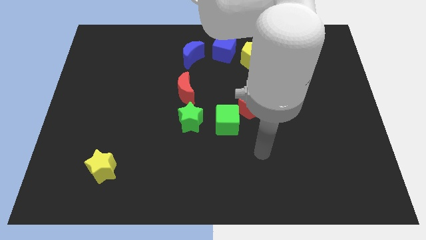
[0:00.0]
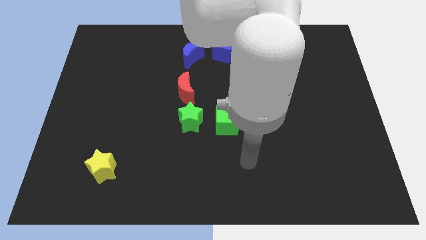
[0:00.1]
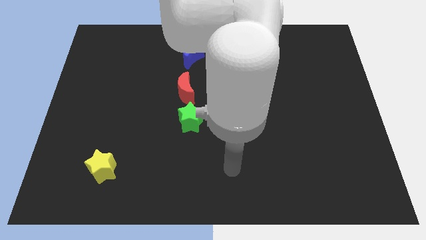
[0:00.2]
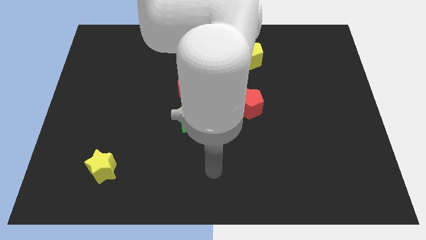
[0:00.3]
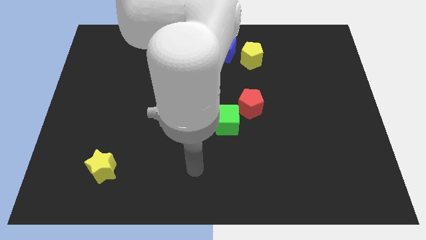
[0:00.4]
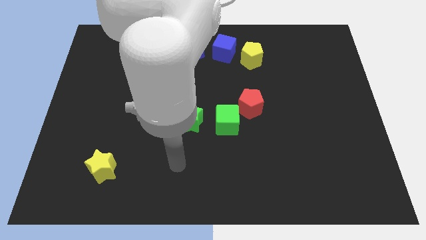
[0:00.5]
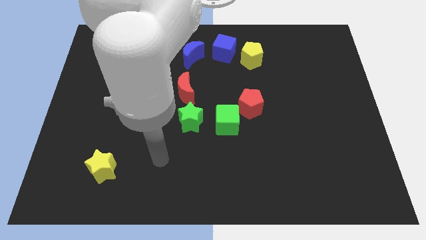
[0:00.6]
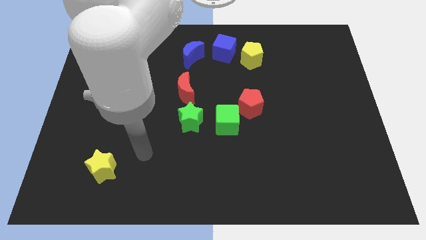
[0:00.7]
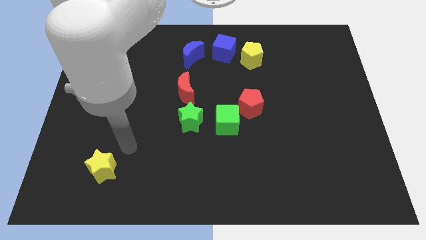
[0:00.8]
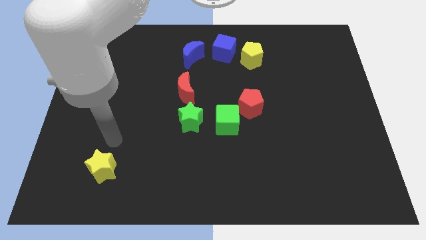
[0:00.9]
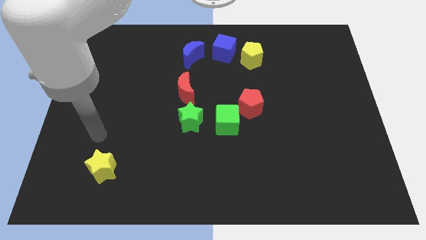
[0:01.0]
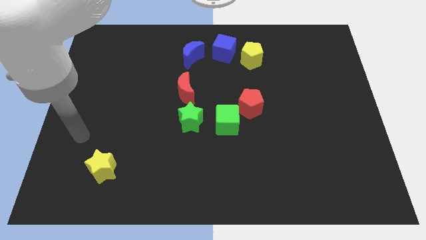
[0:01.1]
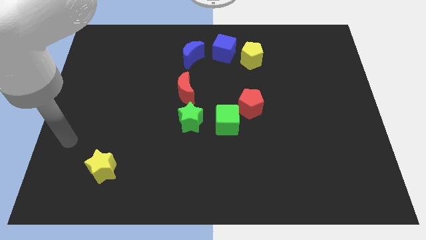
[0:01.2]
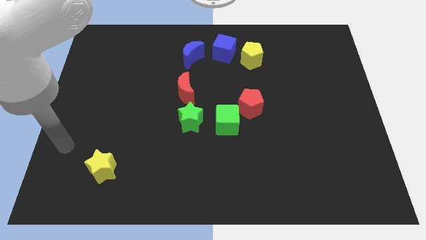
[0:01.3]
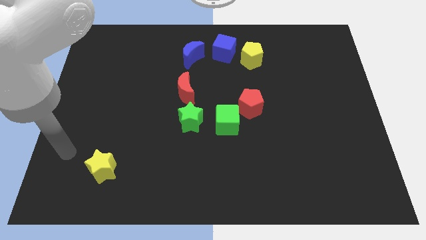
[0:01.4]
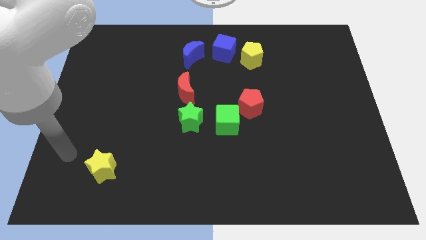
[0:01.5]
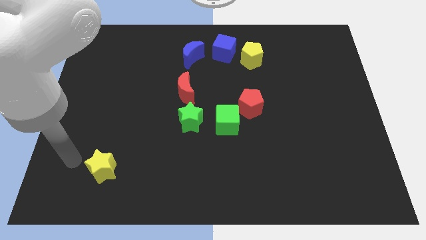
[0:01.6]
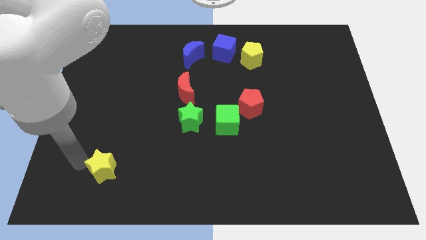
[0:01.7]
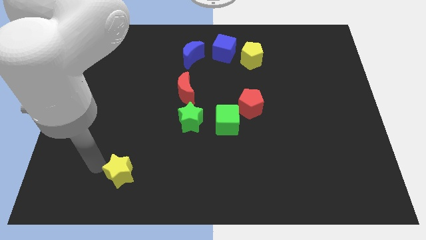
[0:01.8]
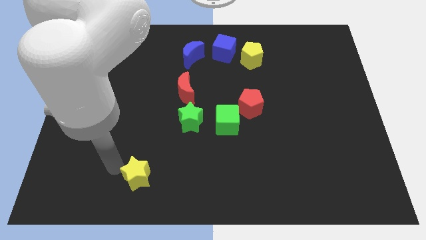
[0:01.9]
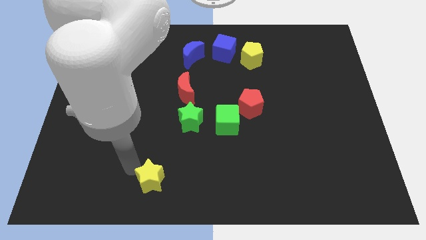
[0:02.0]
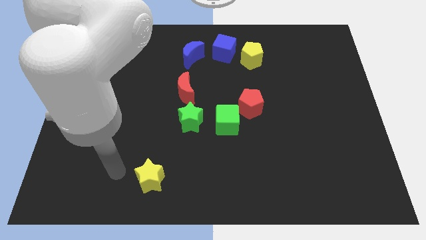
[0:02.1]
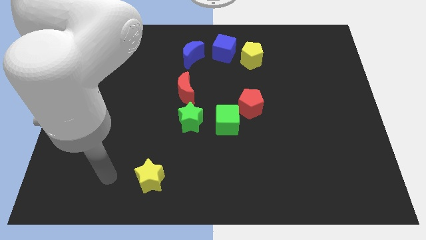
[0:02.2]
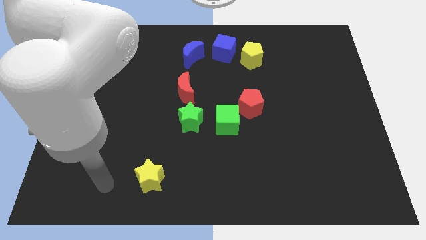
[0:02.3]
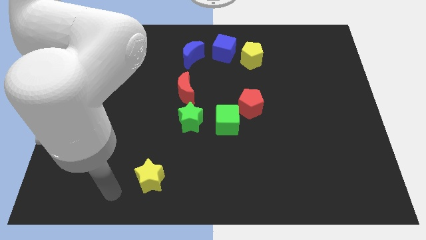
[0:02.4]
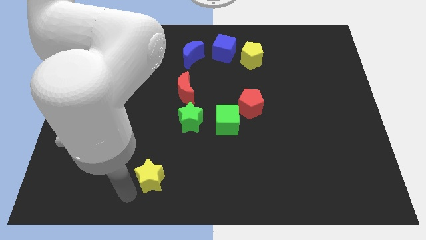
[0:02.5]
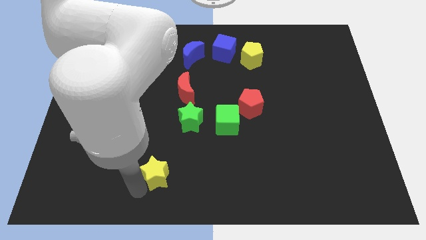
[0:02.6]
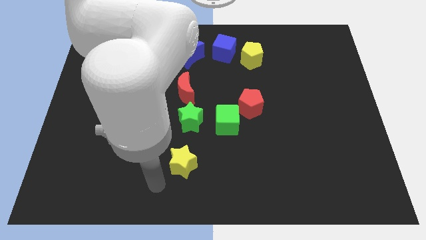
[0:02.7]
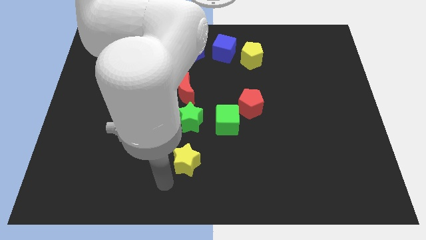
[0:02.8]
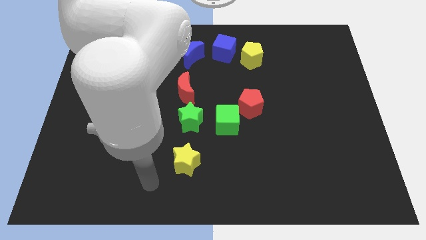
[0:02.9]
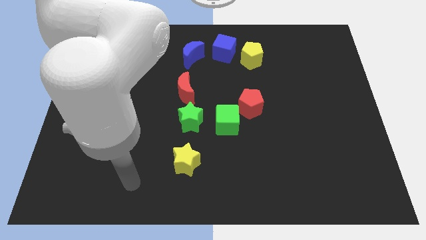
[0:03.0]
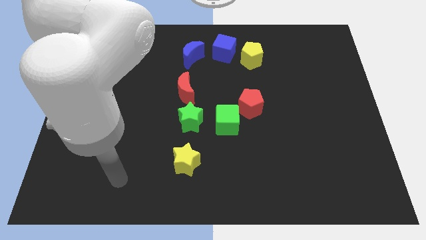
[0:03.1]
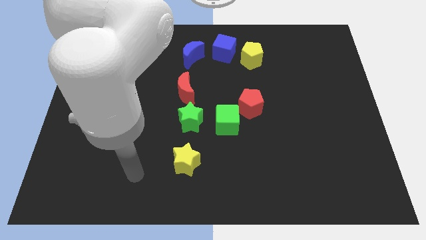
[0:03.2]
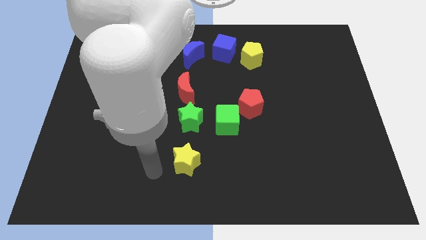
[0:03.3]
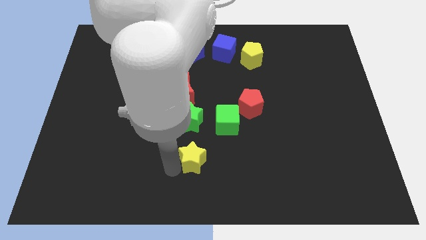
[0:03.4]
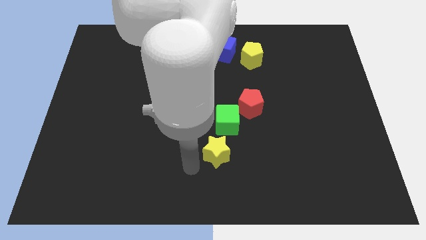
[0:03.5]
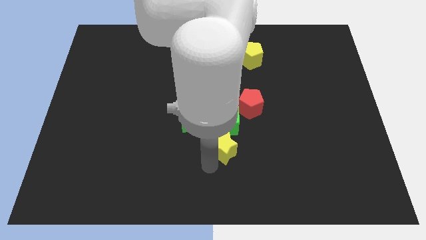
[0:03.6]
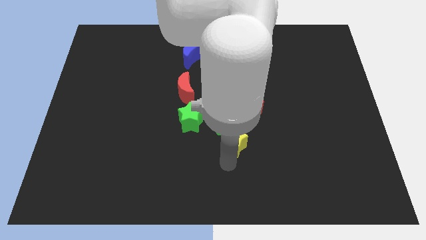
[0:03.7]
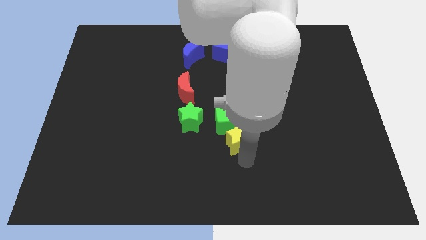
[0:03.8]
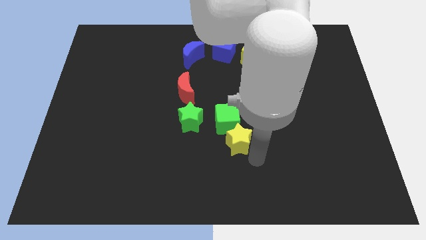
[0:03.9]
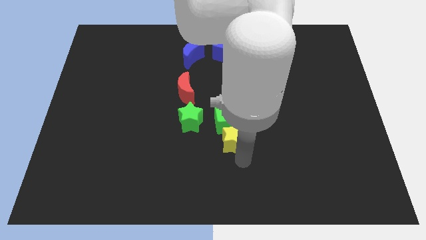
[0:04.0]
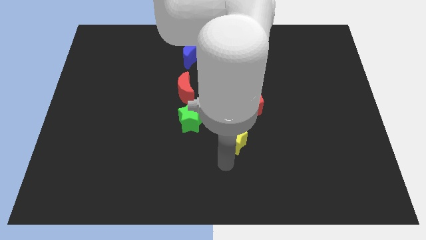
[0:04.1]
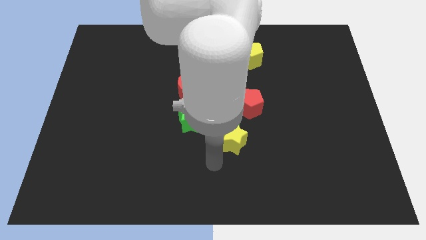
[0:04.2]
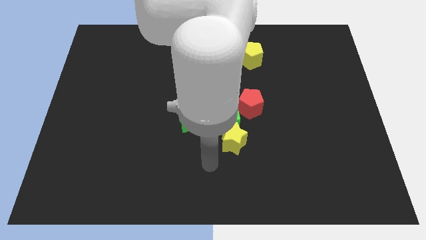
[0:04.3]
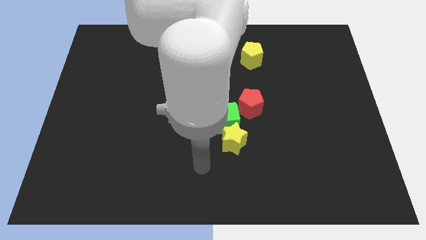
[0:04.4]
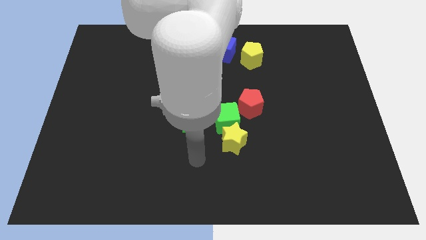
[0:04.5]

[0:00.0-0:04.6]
place the yellow star below the green cube

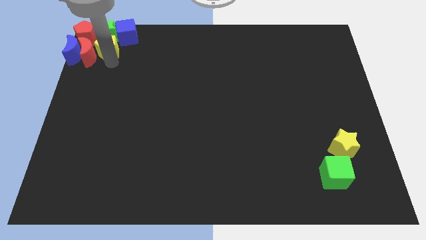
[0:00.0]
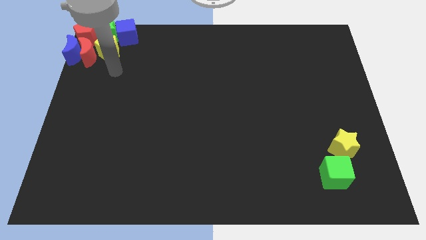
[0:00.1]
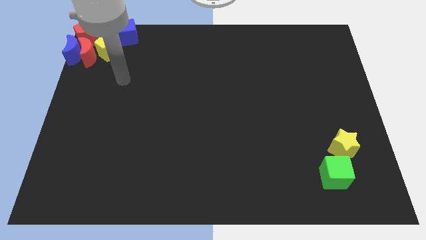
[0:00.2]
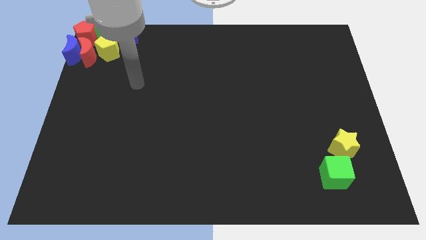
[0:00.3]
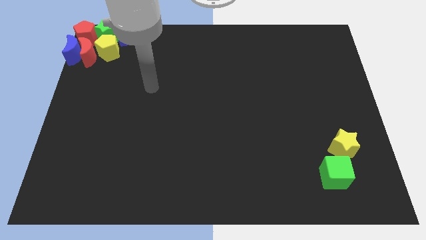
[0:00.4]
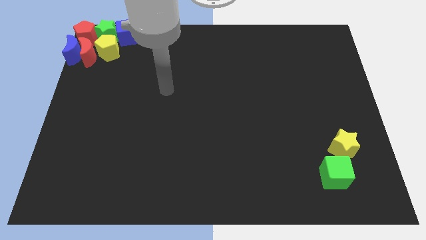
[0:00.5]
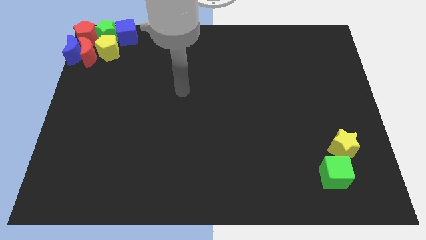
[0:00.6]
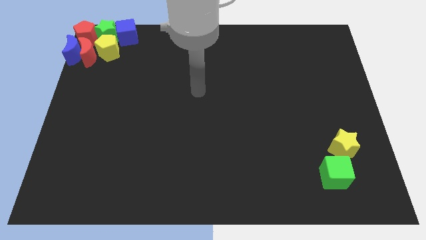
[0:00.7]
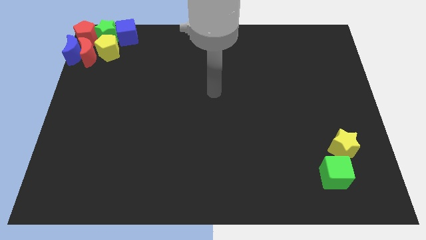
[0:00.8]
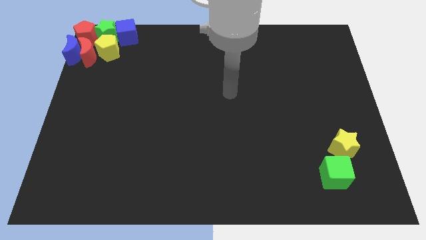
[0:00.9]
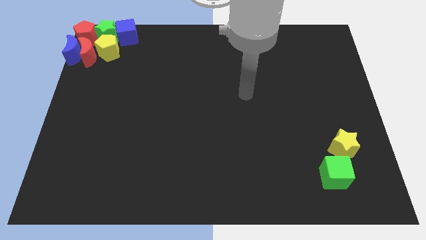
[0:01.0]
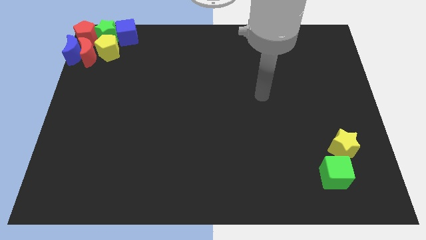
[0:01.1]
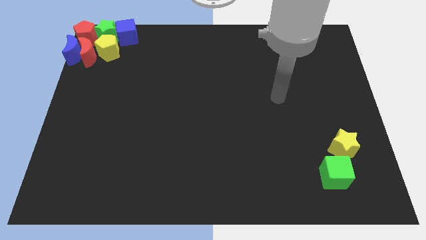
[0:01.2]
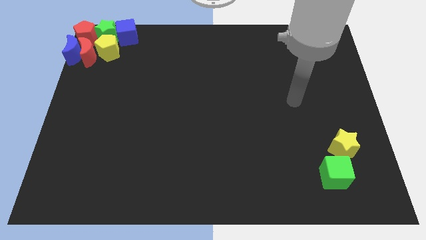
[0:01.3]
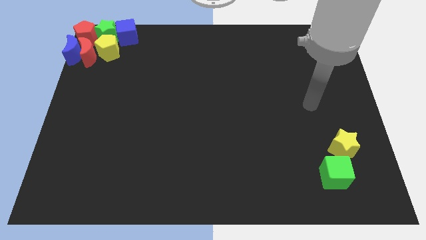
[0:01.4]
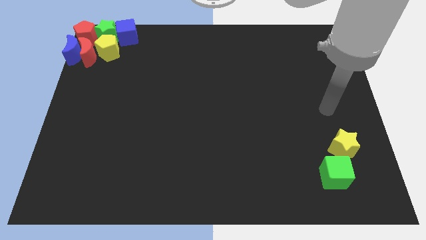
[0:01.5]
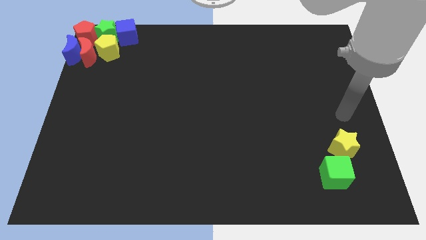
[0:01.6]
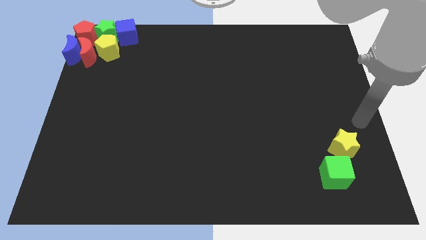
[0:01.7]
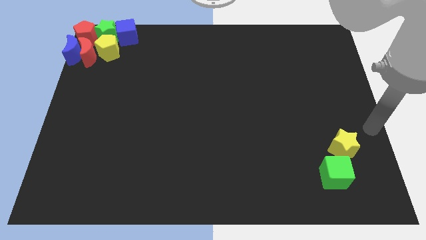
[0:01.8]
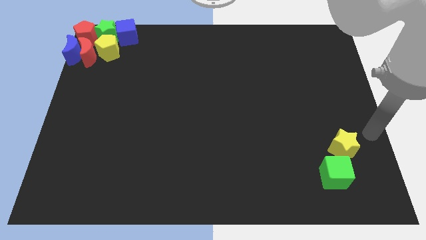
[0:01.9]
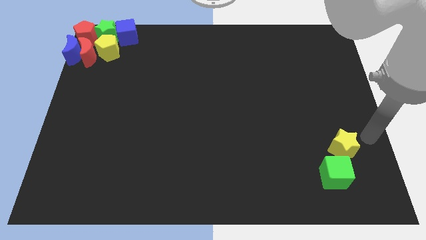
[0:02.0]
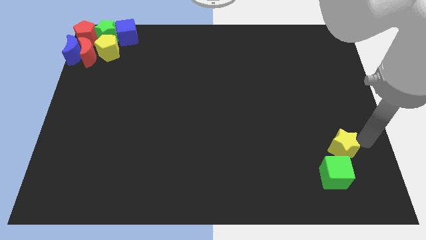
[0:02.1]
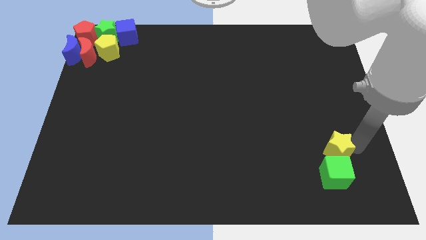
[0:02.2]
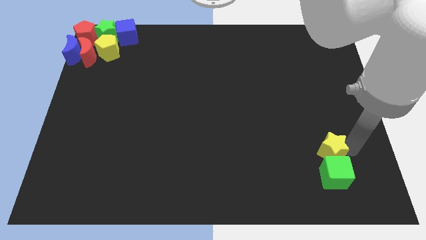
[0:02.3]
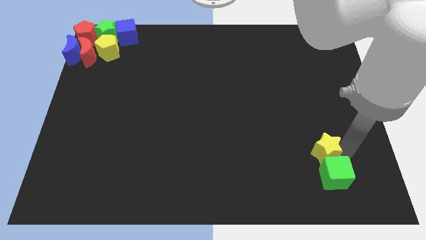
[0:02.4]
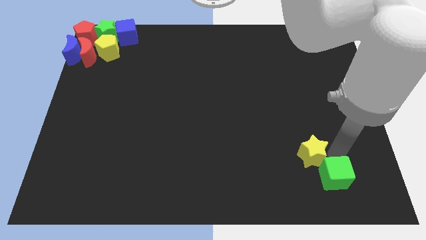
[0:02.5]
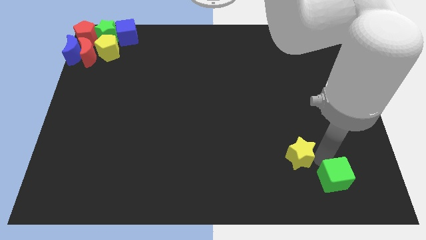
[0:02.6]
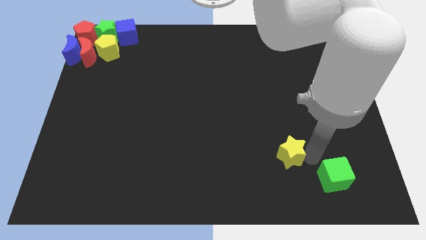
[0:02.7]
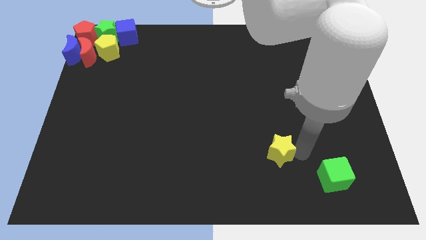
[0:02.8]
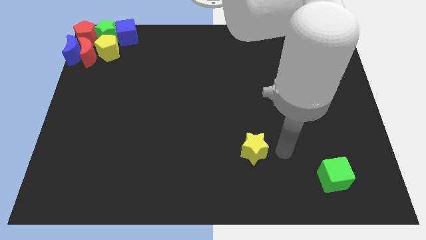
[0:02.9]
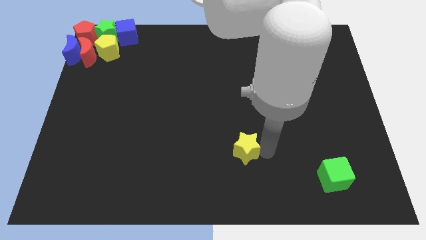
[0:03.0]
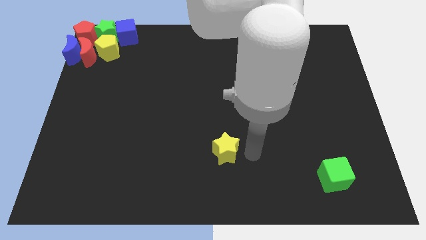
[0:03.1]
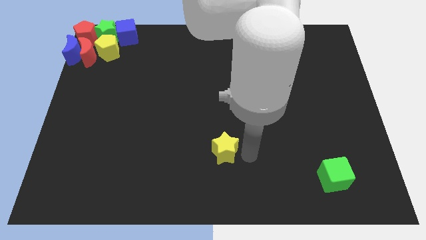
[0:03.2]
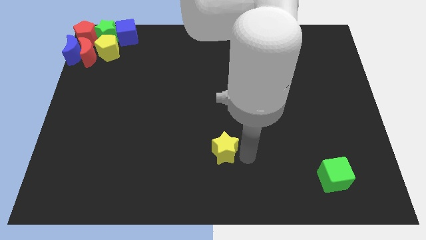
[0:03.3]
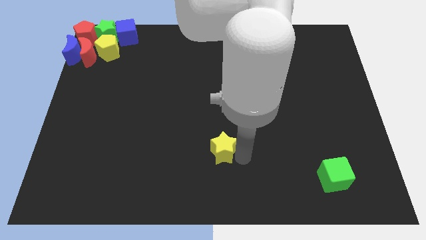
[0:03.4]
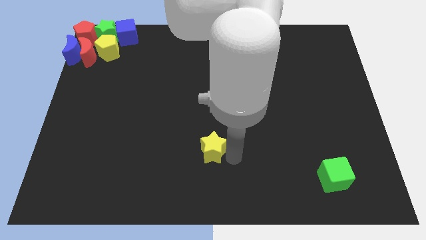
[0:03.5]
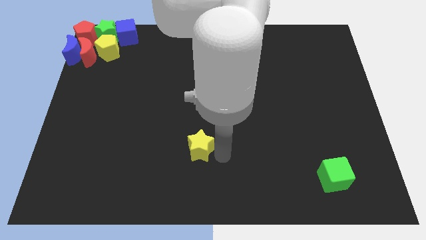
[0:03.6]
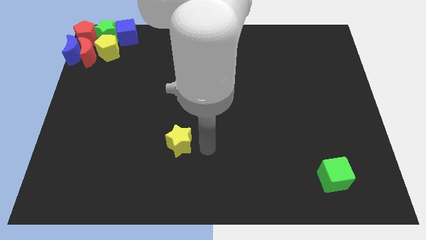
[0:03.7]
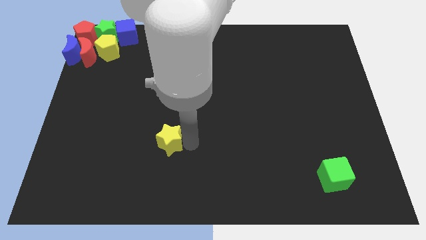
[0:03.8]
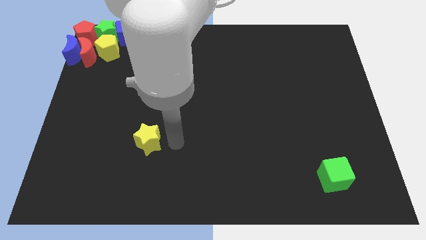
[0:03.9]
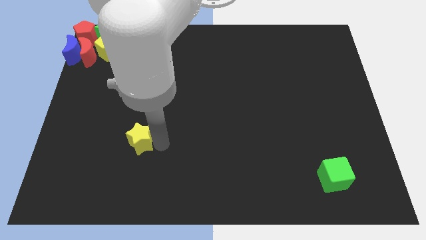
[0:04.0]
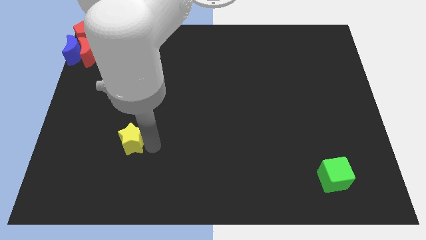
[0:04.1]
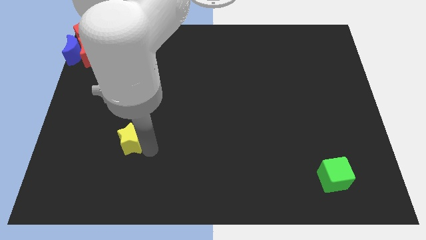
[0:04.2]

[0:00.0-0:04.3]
move the yellow star away from the top side of the green cube
